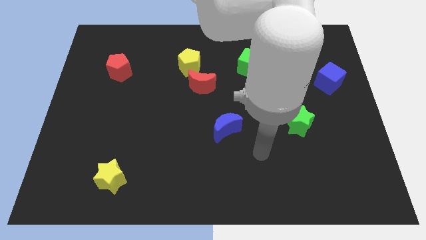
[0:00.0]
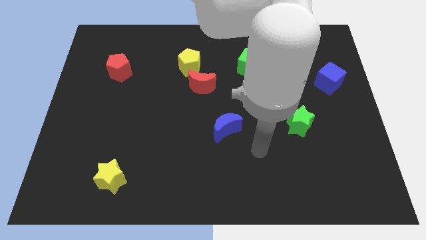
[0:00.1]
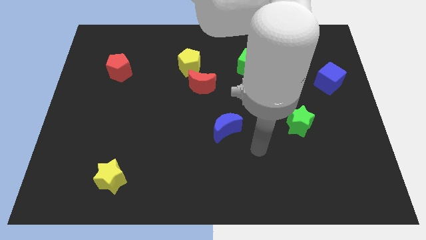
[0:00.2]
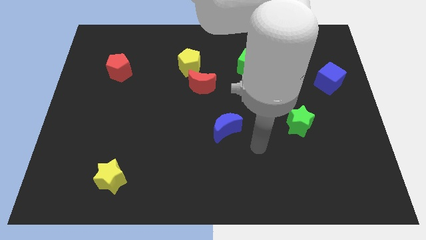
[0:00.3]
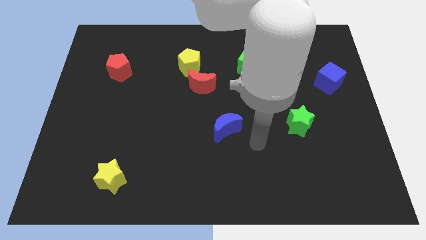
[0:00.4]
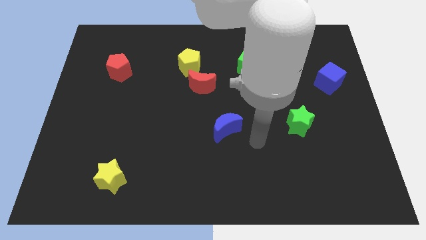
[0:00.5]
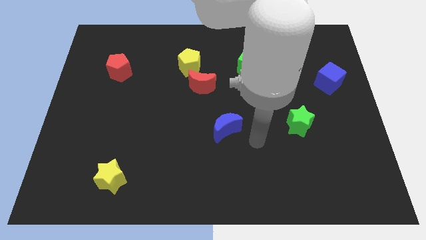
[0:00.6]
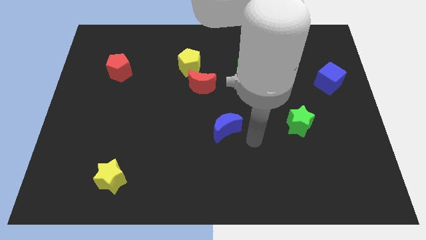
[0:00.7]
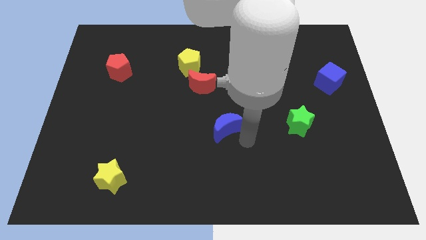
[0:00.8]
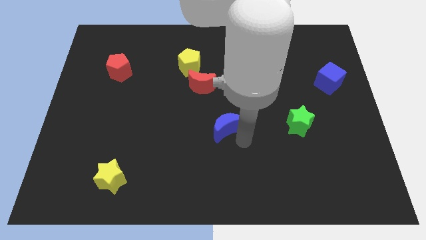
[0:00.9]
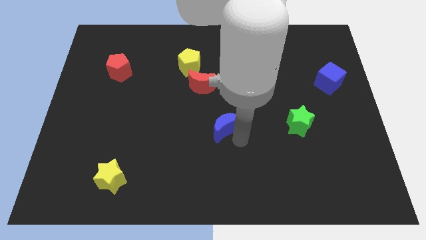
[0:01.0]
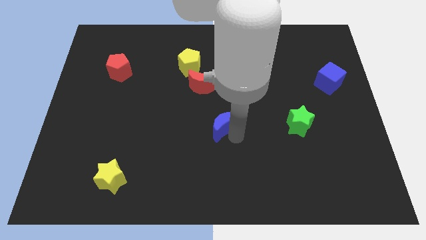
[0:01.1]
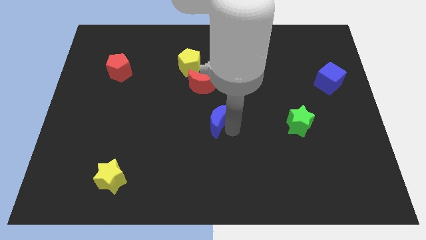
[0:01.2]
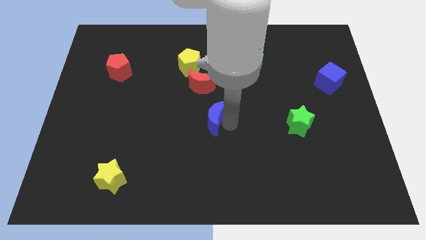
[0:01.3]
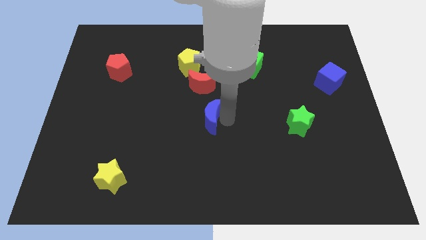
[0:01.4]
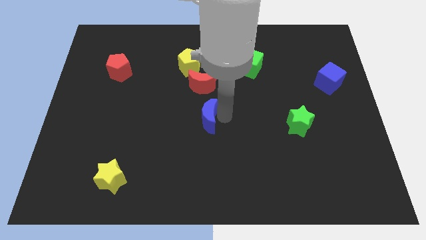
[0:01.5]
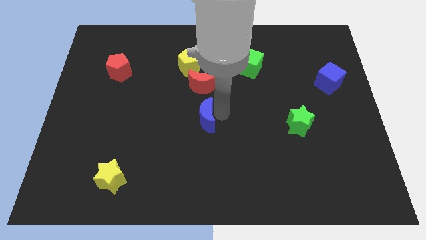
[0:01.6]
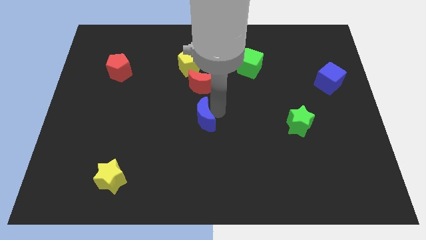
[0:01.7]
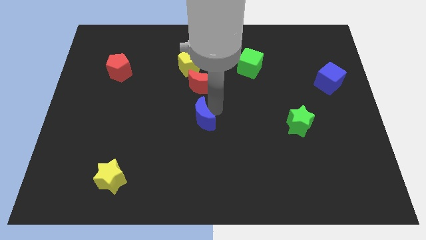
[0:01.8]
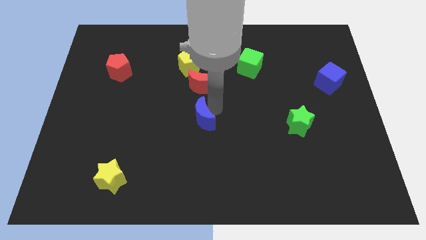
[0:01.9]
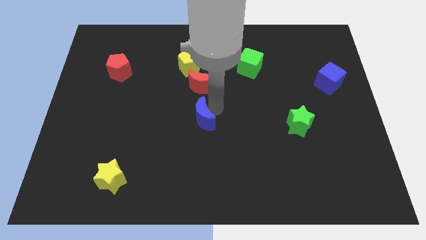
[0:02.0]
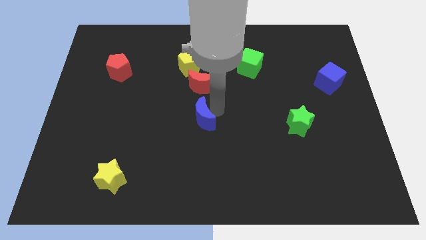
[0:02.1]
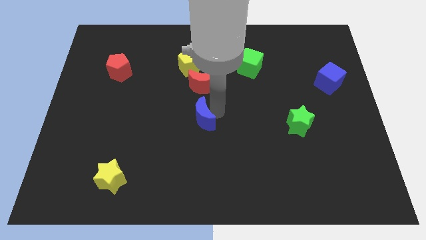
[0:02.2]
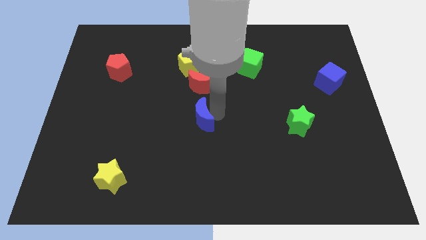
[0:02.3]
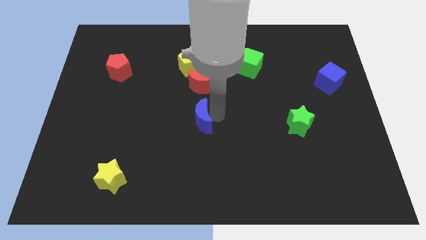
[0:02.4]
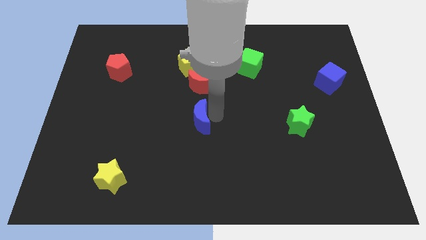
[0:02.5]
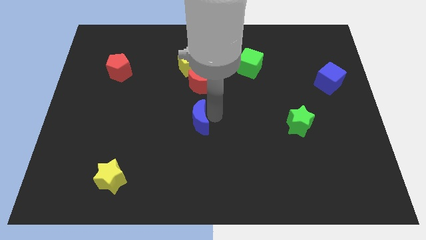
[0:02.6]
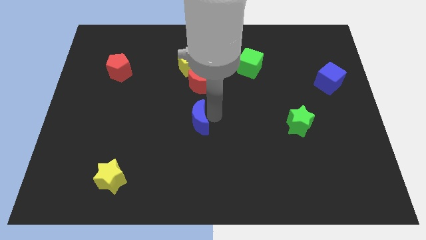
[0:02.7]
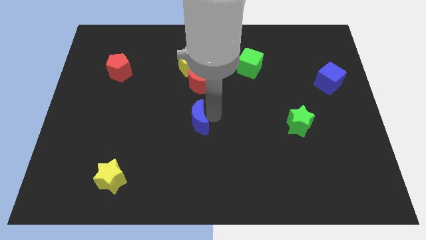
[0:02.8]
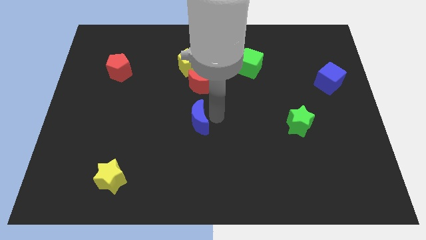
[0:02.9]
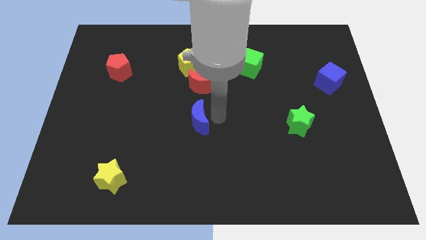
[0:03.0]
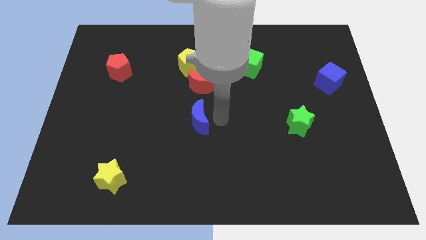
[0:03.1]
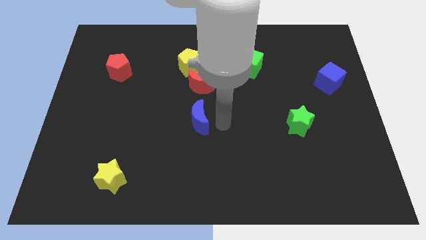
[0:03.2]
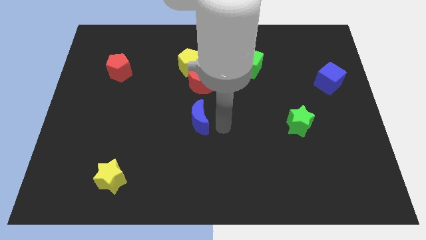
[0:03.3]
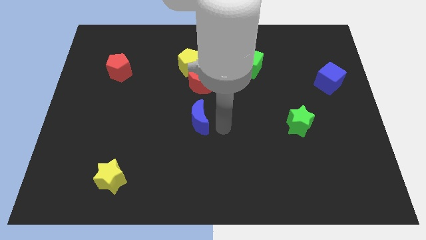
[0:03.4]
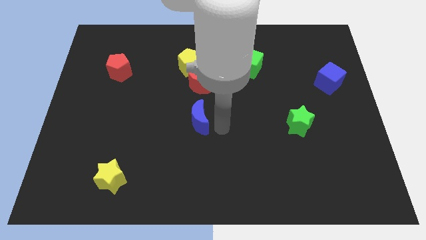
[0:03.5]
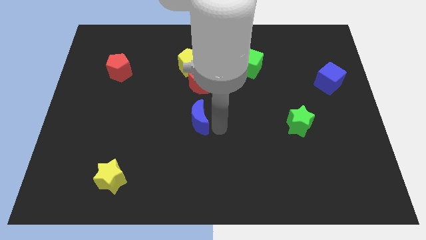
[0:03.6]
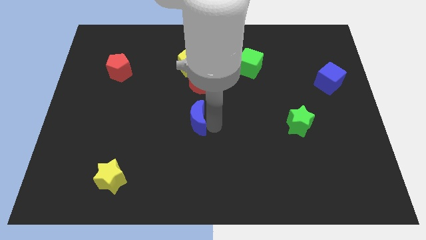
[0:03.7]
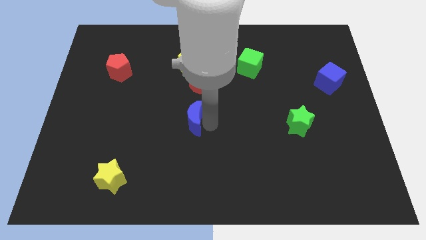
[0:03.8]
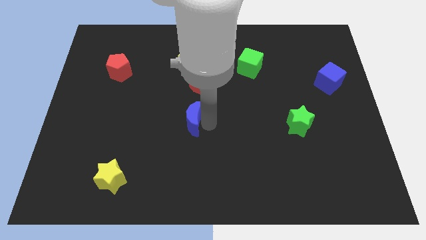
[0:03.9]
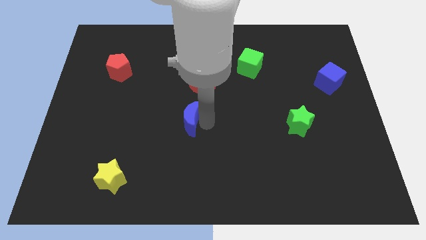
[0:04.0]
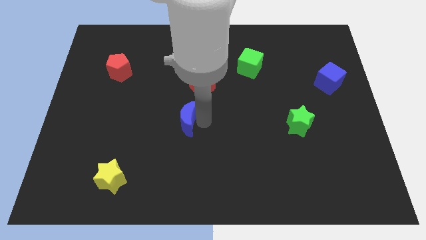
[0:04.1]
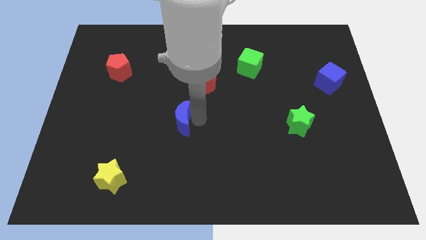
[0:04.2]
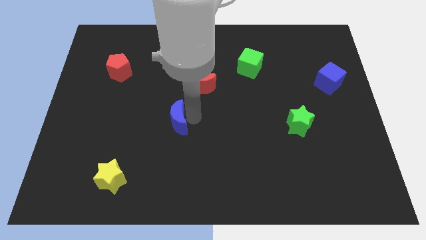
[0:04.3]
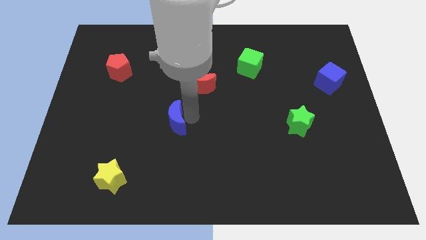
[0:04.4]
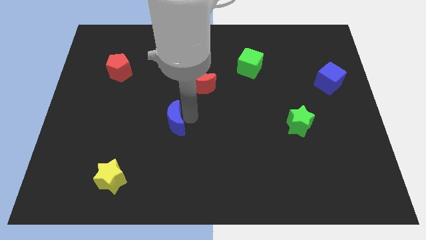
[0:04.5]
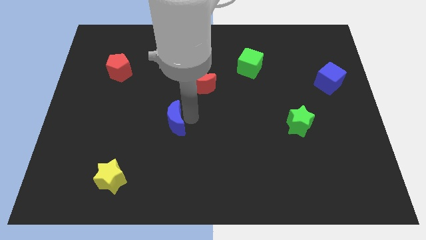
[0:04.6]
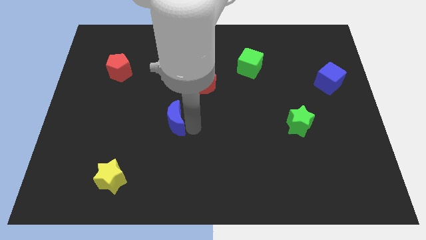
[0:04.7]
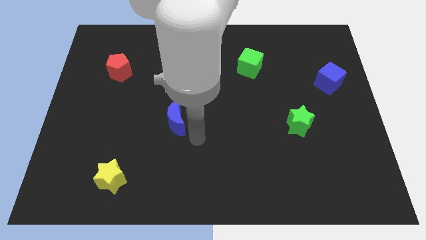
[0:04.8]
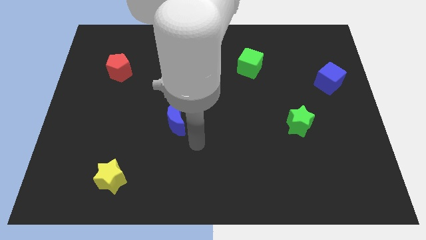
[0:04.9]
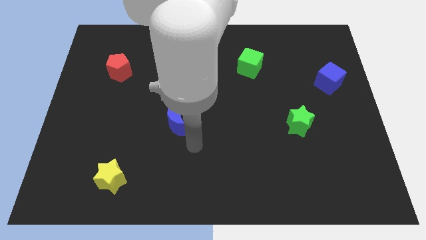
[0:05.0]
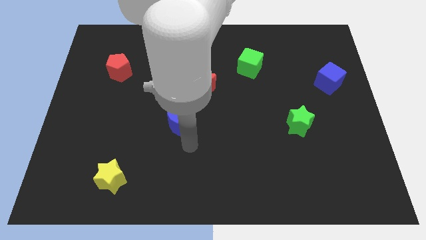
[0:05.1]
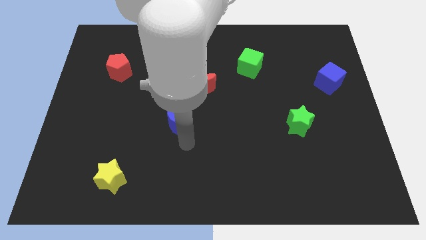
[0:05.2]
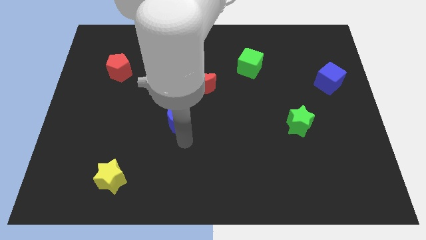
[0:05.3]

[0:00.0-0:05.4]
place the blue moon in between the red moon and yellow star

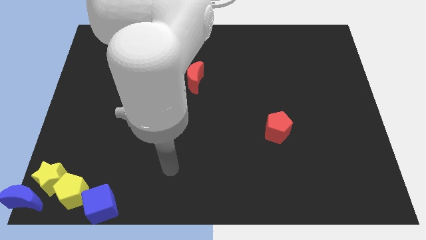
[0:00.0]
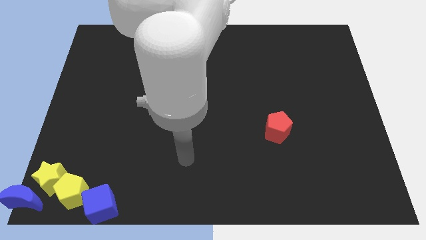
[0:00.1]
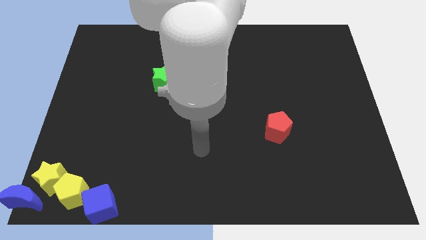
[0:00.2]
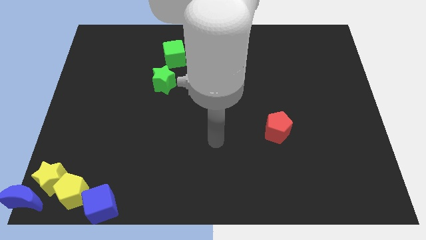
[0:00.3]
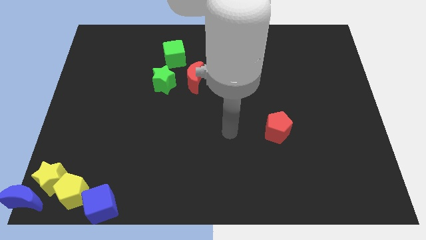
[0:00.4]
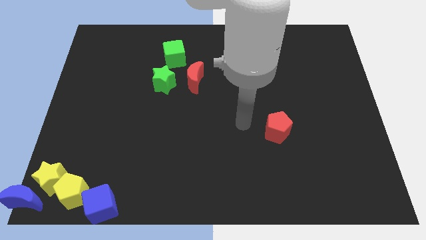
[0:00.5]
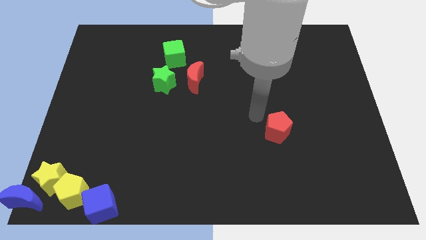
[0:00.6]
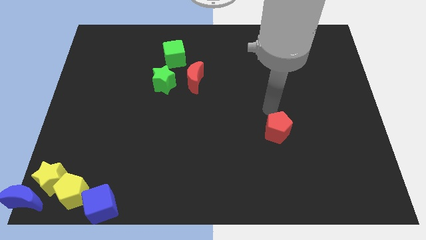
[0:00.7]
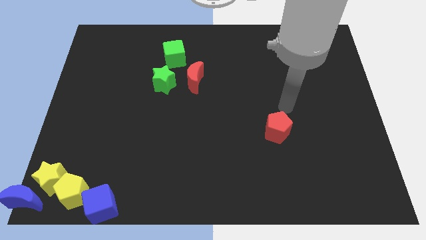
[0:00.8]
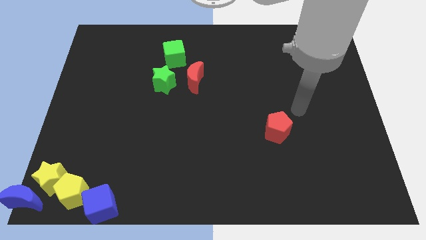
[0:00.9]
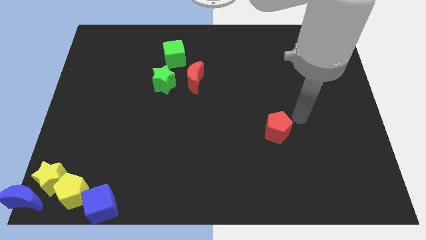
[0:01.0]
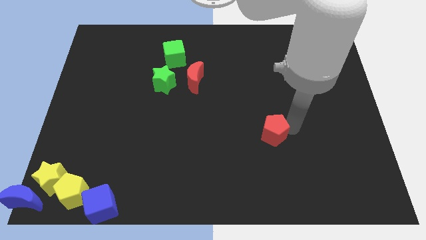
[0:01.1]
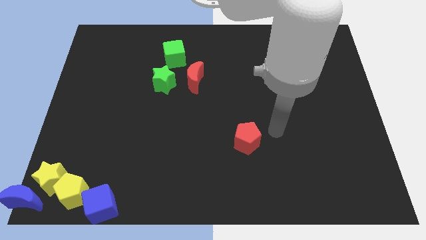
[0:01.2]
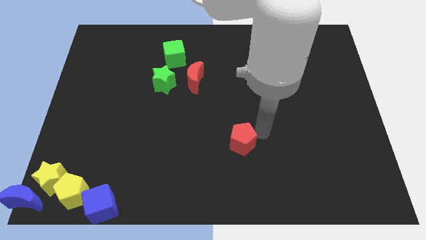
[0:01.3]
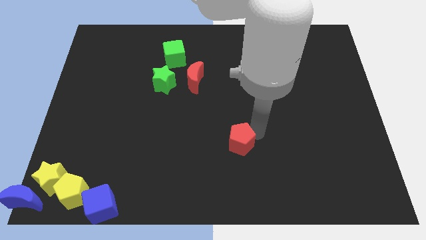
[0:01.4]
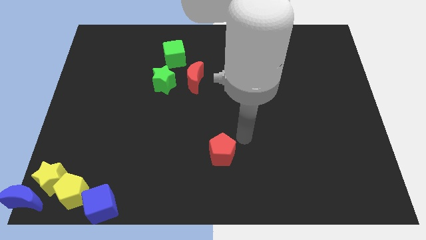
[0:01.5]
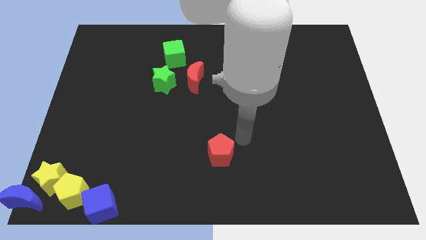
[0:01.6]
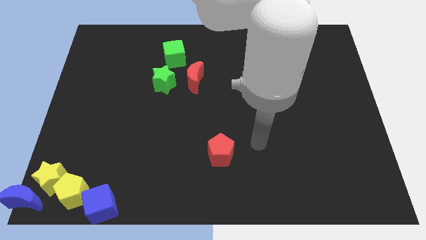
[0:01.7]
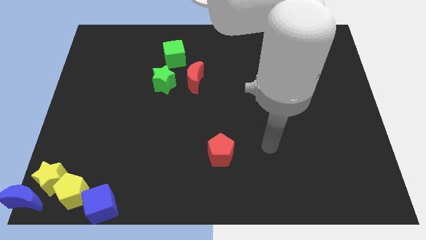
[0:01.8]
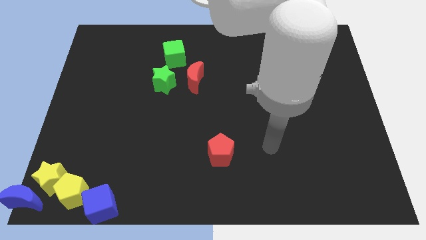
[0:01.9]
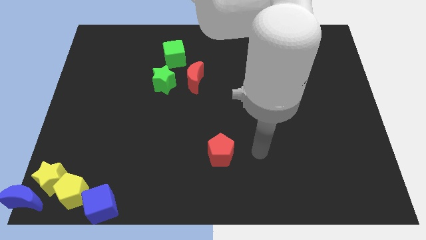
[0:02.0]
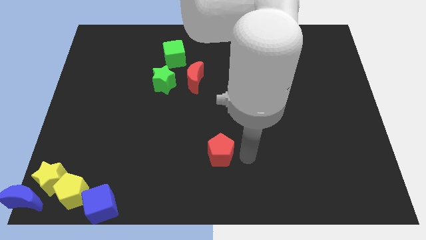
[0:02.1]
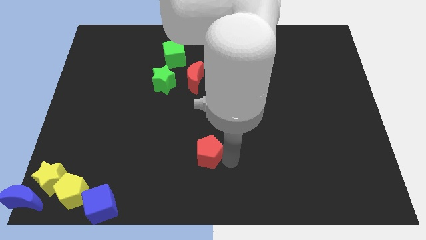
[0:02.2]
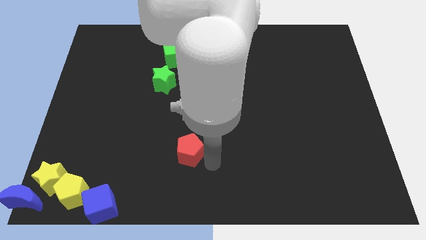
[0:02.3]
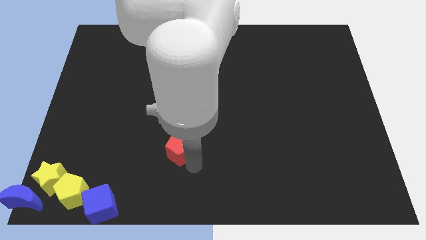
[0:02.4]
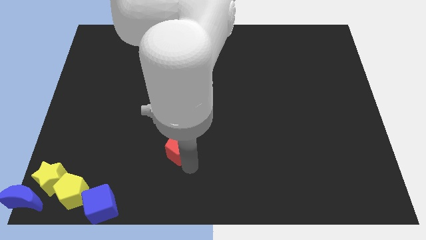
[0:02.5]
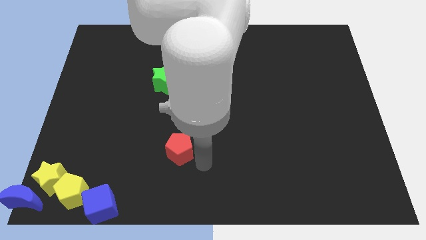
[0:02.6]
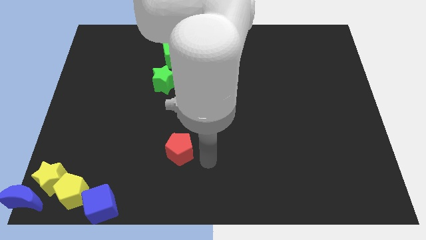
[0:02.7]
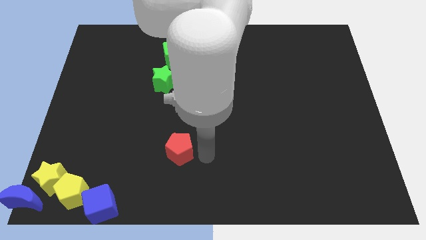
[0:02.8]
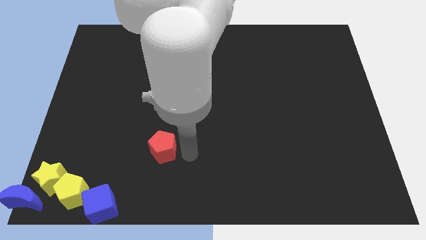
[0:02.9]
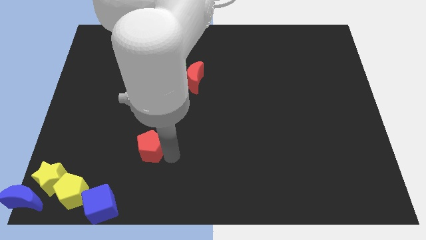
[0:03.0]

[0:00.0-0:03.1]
place the red pentagon above the blue cube

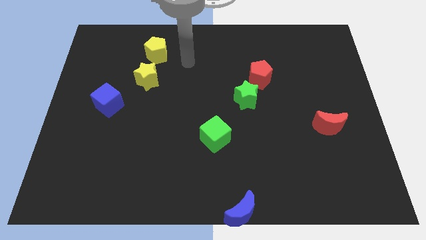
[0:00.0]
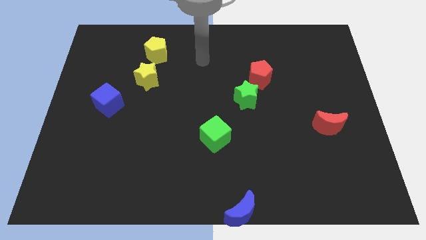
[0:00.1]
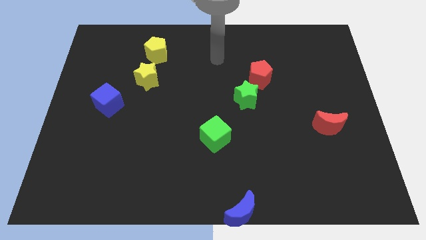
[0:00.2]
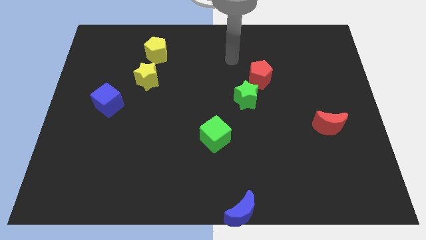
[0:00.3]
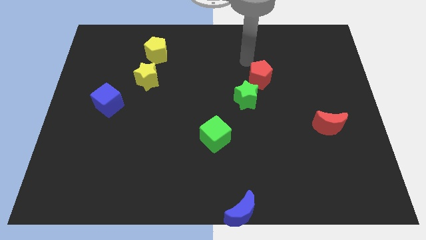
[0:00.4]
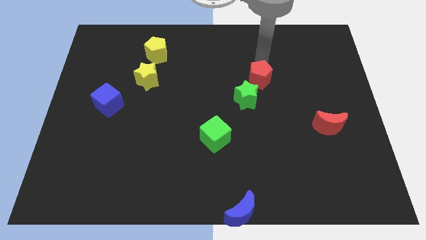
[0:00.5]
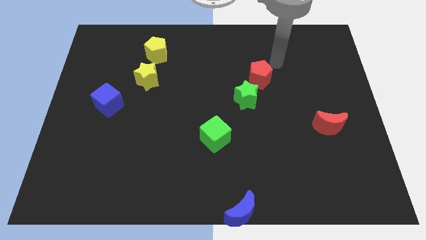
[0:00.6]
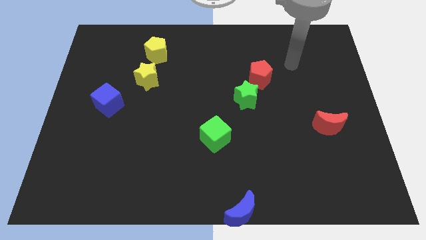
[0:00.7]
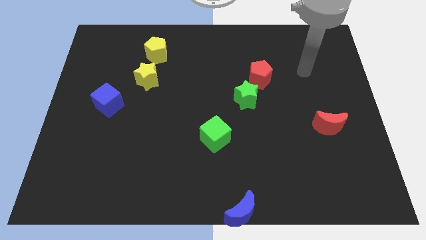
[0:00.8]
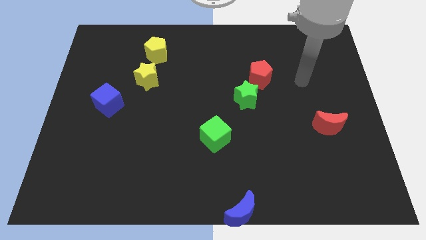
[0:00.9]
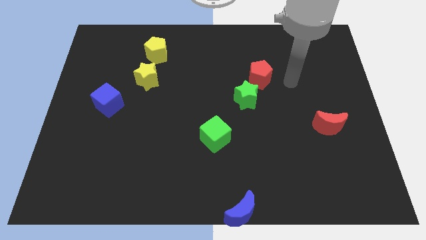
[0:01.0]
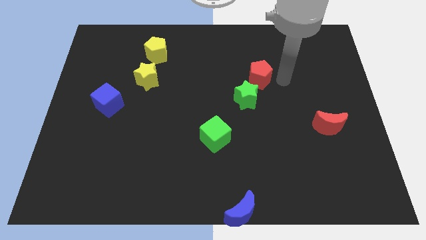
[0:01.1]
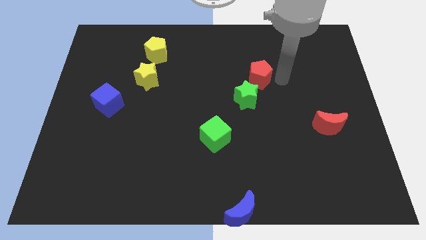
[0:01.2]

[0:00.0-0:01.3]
move arm towards red pentagon
